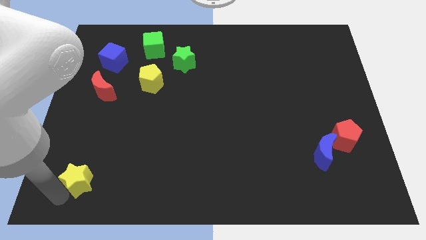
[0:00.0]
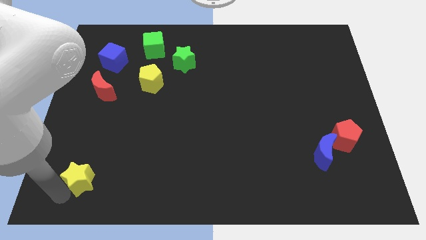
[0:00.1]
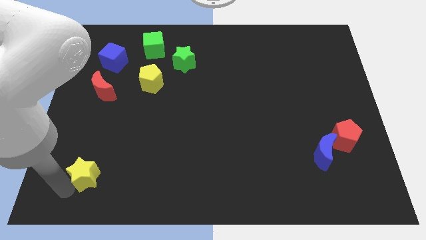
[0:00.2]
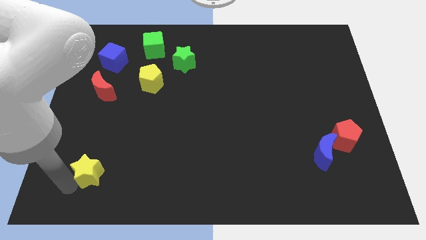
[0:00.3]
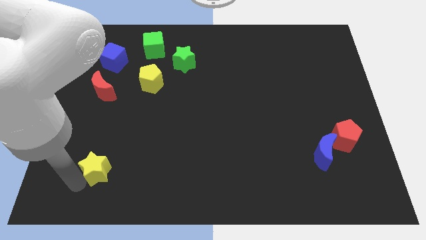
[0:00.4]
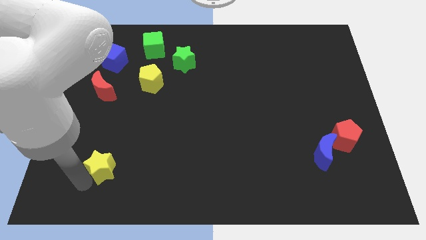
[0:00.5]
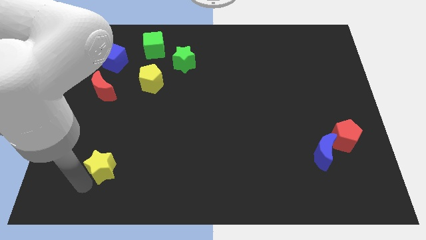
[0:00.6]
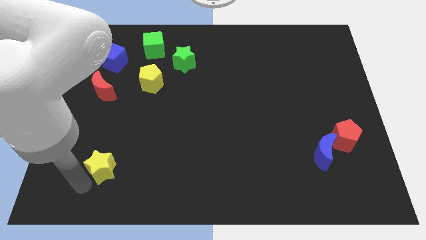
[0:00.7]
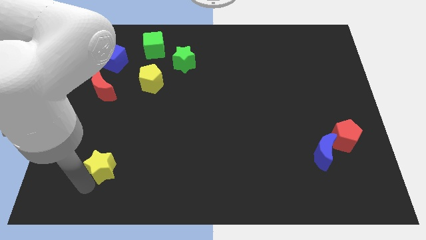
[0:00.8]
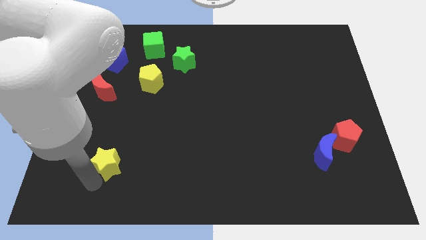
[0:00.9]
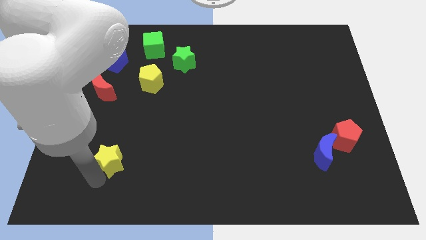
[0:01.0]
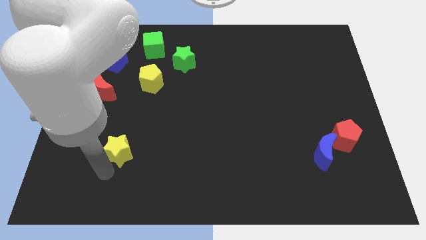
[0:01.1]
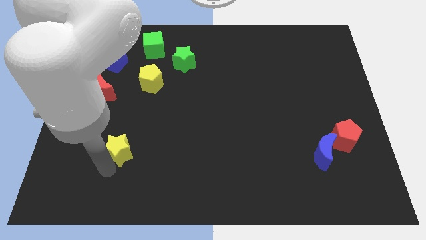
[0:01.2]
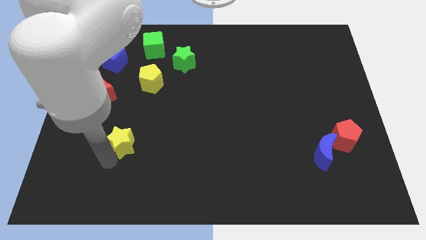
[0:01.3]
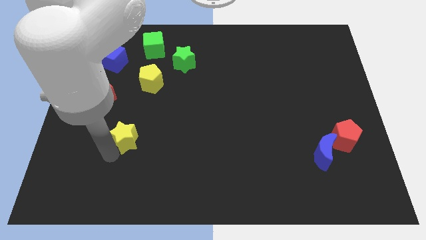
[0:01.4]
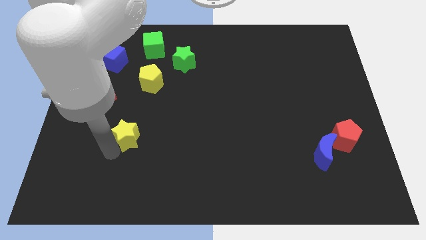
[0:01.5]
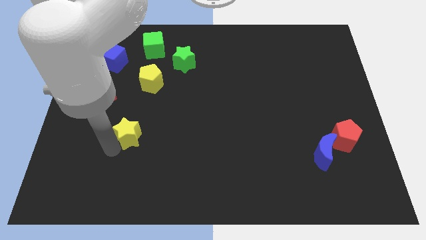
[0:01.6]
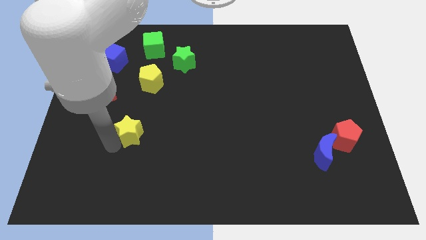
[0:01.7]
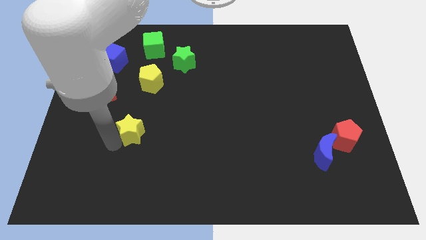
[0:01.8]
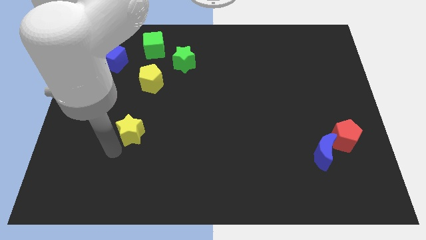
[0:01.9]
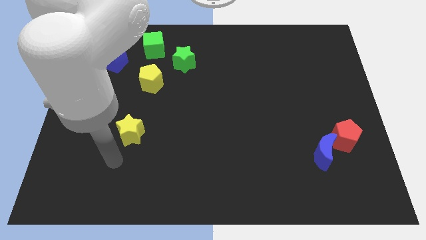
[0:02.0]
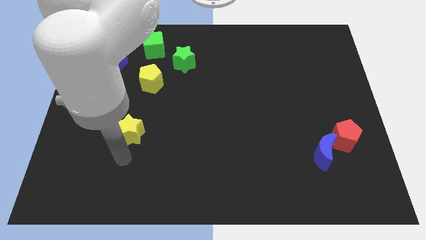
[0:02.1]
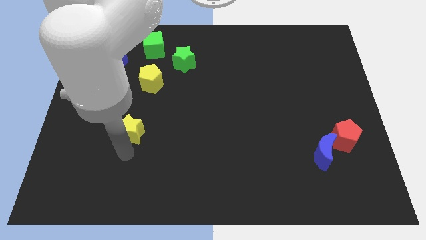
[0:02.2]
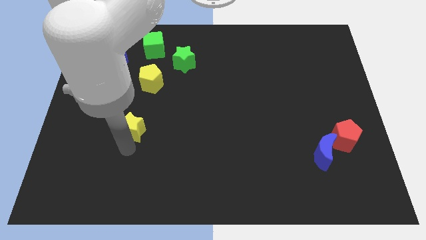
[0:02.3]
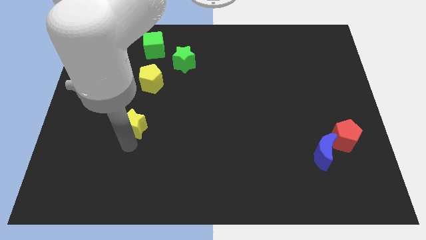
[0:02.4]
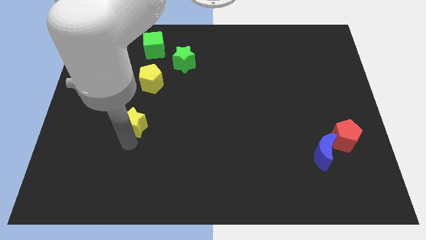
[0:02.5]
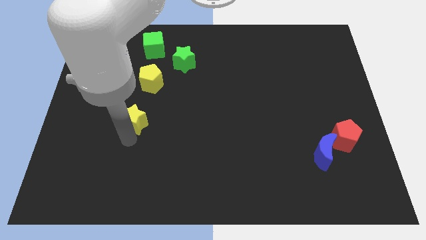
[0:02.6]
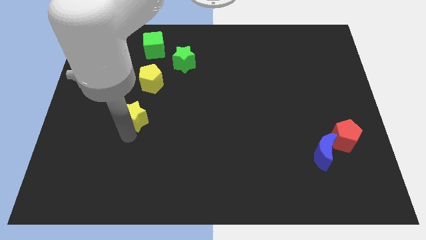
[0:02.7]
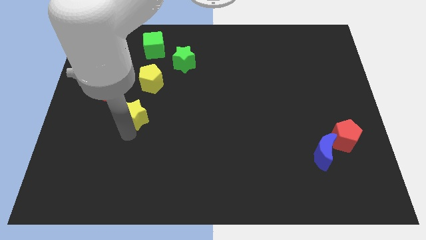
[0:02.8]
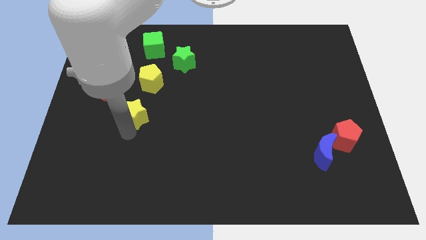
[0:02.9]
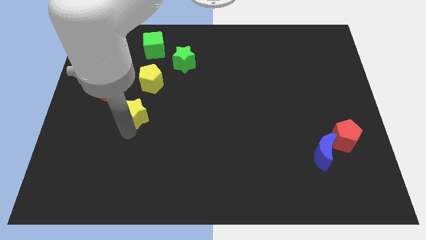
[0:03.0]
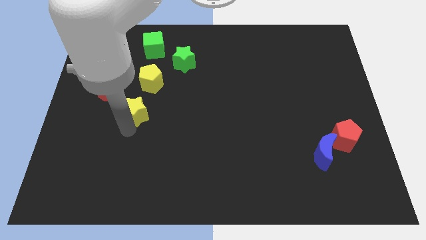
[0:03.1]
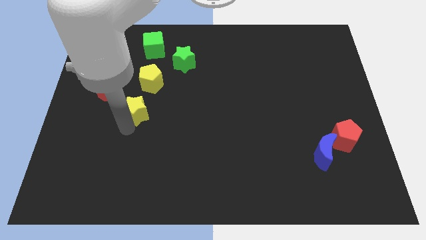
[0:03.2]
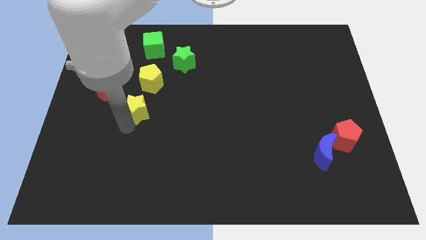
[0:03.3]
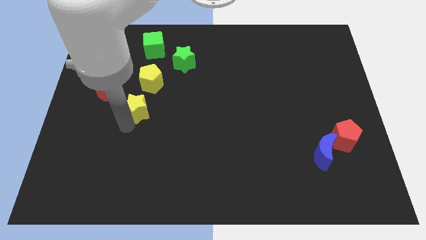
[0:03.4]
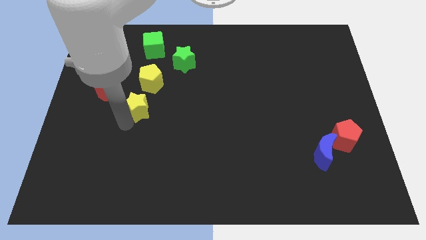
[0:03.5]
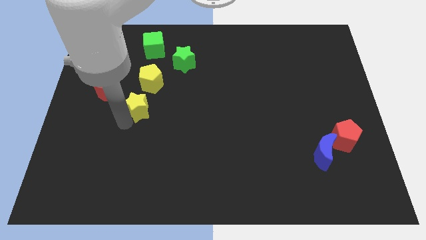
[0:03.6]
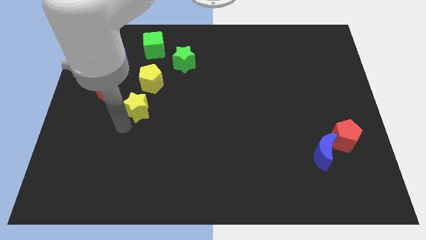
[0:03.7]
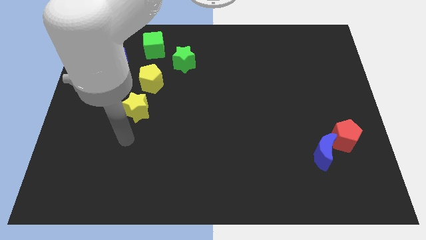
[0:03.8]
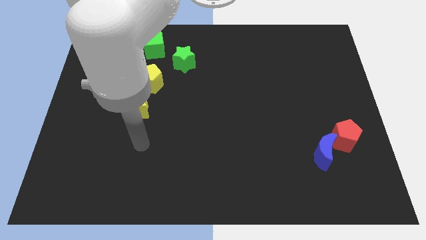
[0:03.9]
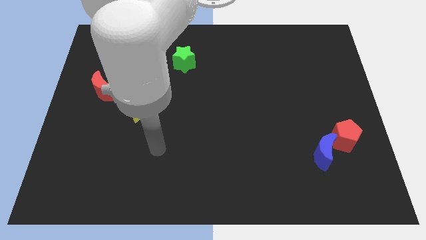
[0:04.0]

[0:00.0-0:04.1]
slide yellow star below yellow pentagon

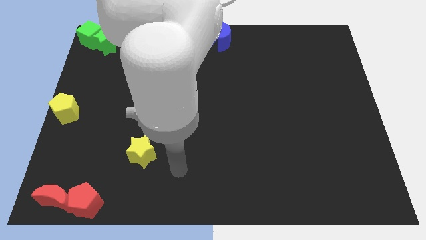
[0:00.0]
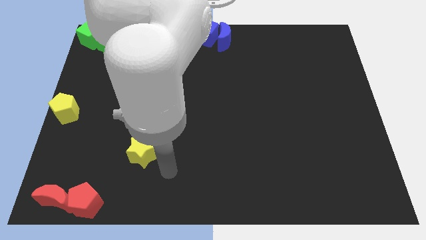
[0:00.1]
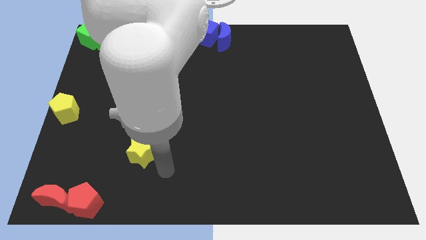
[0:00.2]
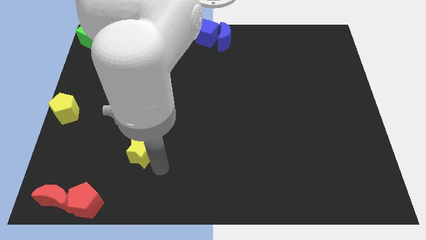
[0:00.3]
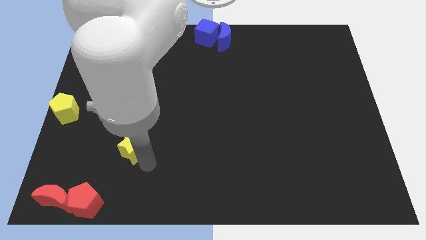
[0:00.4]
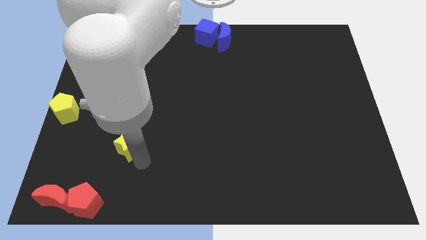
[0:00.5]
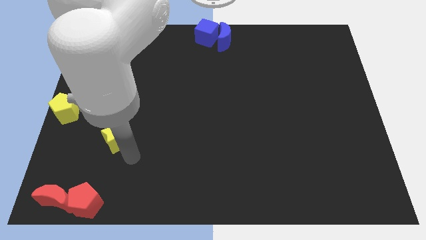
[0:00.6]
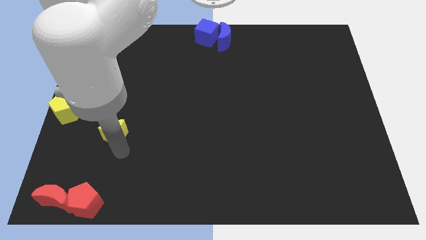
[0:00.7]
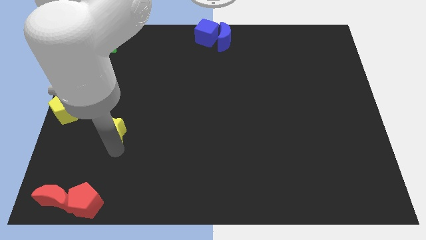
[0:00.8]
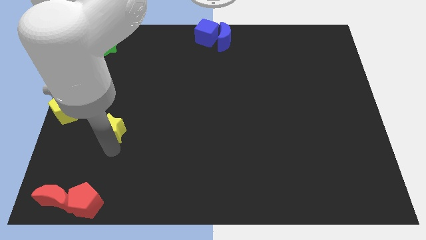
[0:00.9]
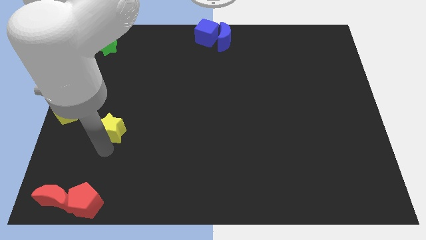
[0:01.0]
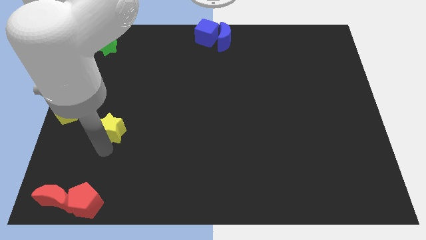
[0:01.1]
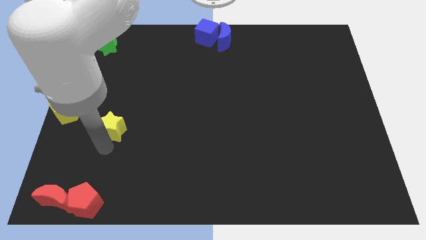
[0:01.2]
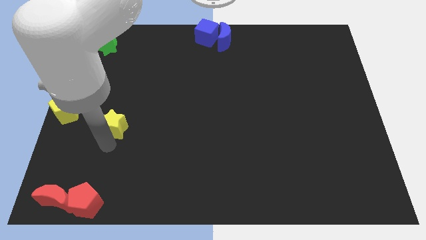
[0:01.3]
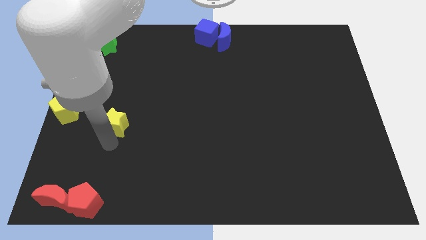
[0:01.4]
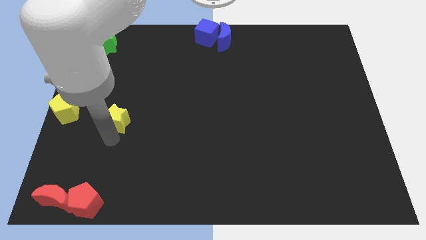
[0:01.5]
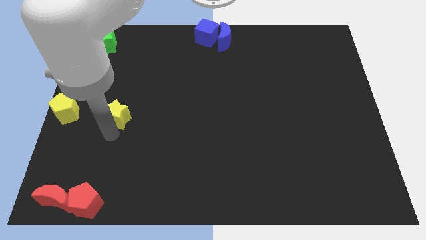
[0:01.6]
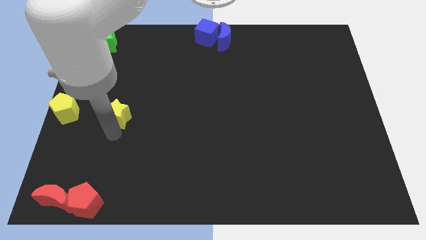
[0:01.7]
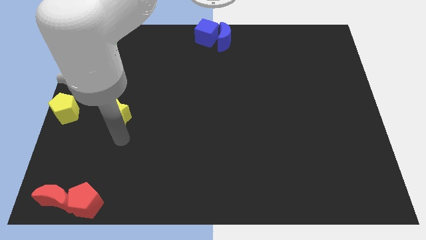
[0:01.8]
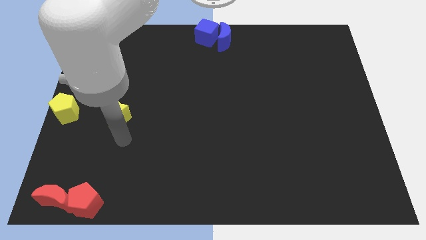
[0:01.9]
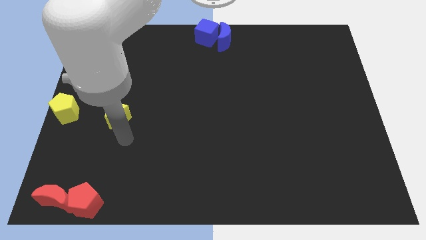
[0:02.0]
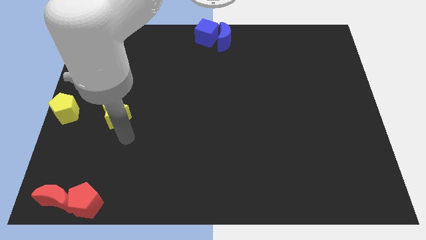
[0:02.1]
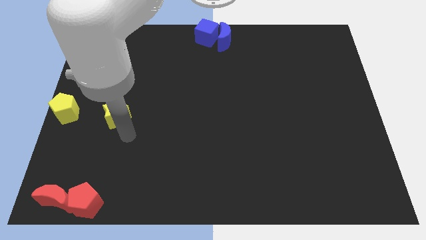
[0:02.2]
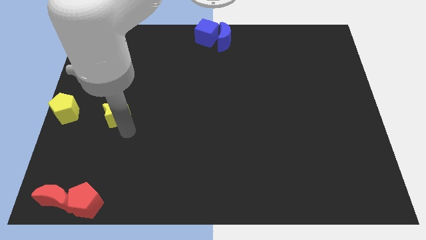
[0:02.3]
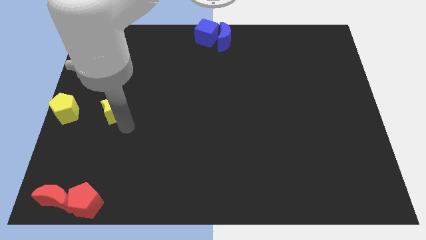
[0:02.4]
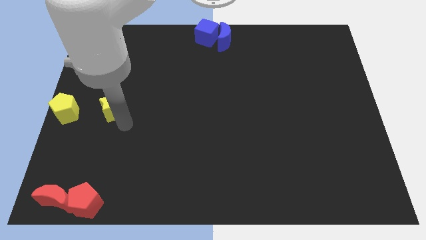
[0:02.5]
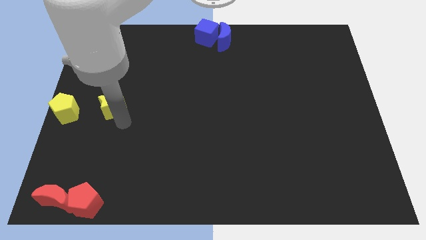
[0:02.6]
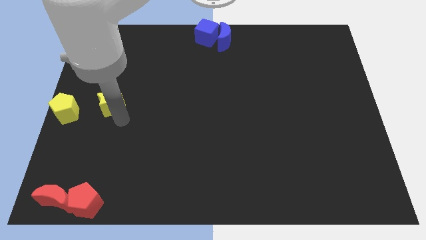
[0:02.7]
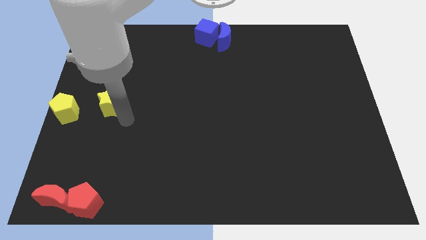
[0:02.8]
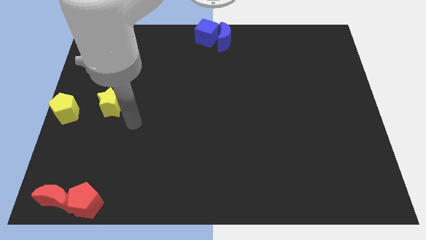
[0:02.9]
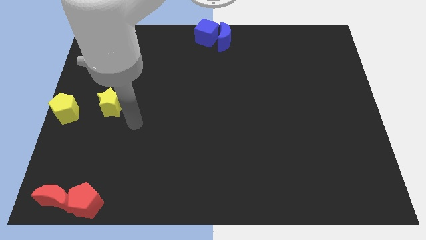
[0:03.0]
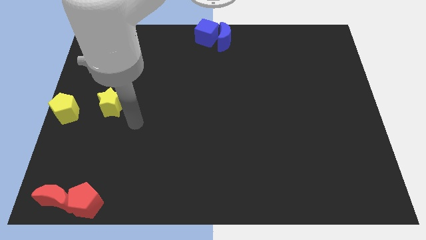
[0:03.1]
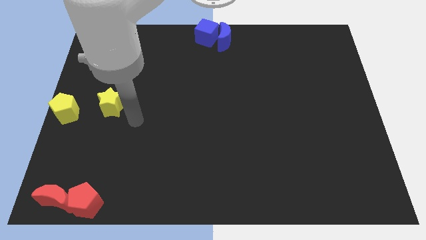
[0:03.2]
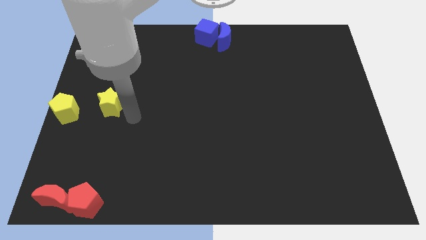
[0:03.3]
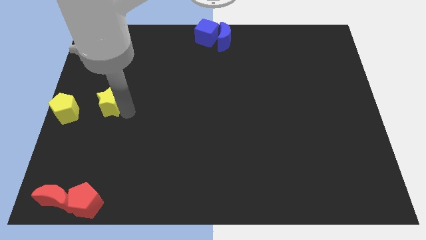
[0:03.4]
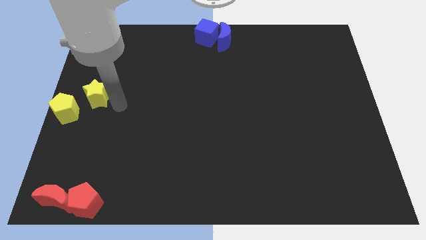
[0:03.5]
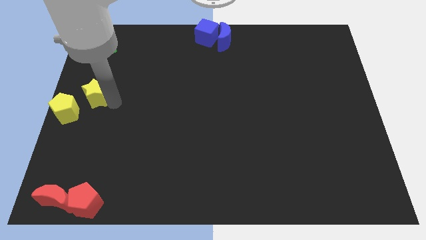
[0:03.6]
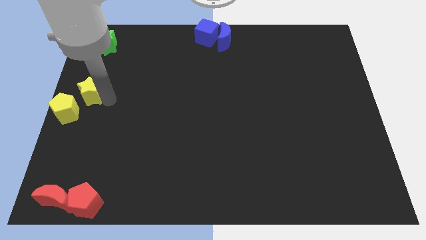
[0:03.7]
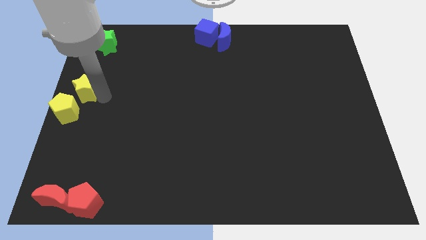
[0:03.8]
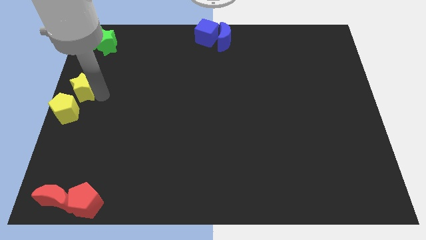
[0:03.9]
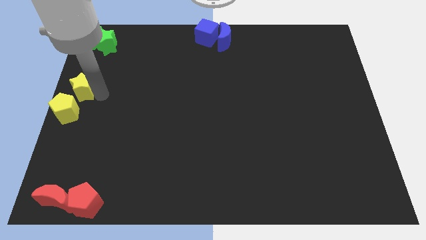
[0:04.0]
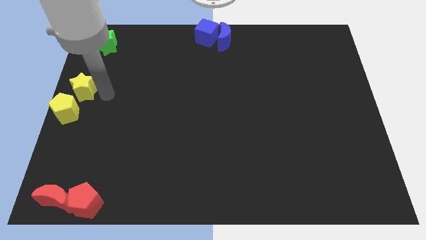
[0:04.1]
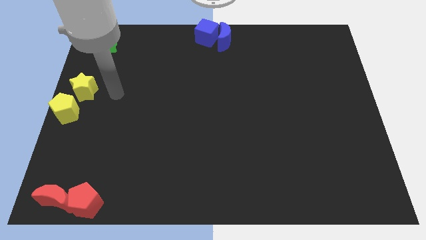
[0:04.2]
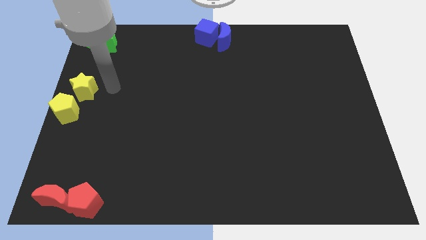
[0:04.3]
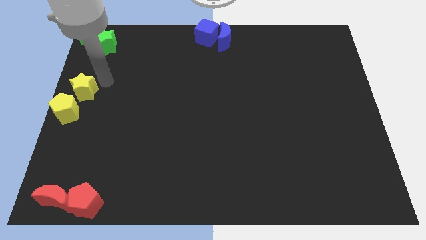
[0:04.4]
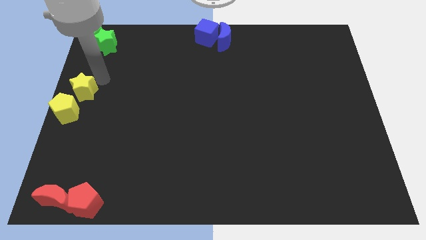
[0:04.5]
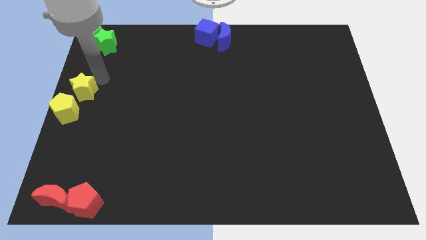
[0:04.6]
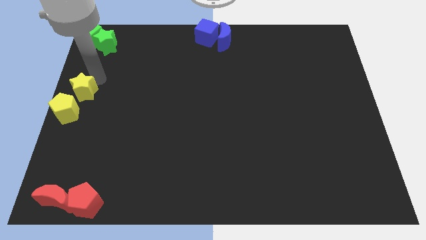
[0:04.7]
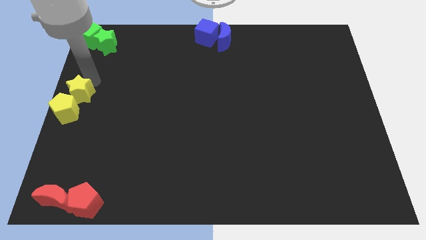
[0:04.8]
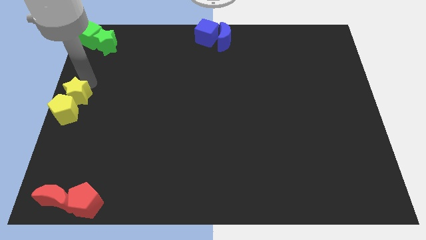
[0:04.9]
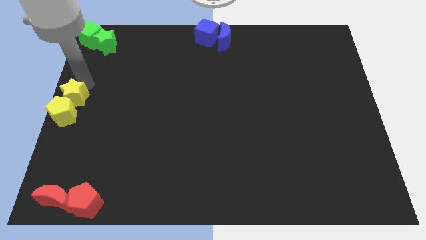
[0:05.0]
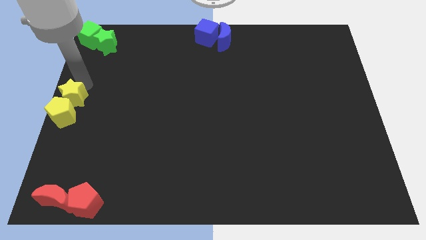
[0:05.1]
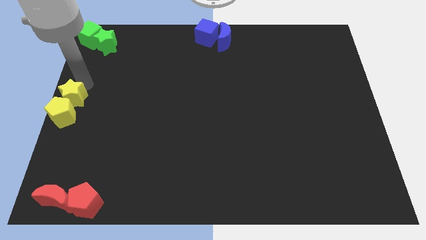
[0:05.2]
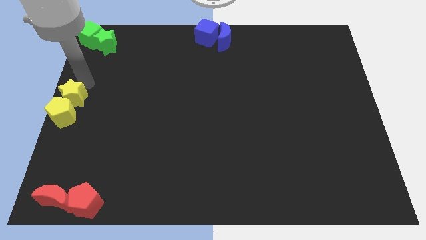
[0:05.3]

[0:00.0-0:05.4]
move the yellow star into the yellow pentagon
